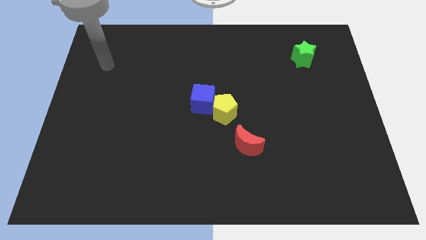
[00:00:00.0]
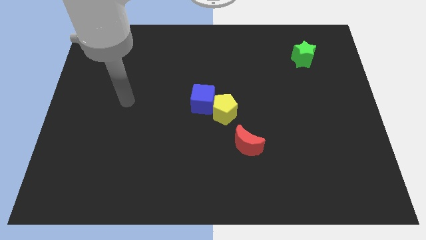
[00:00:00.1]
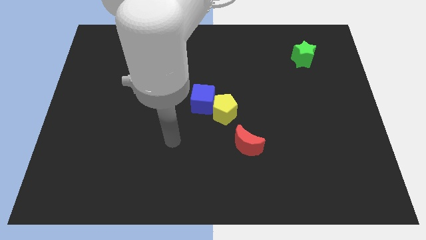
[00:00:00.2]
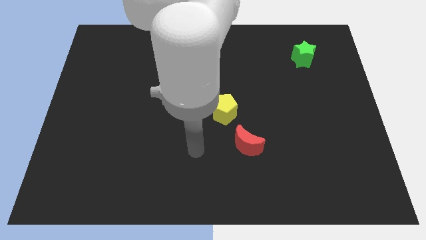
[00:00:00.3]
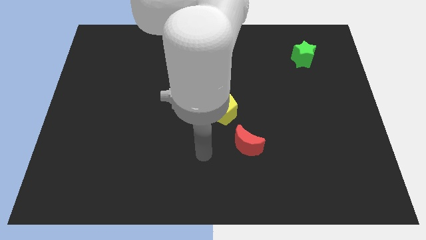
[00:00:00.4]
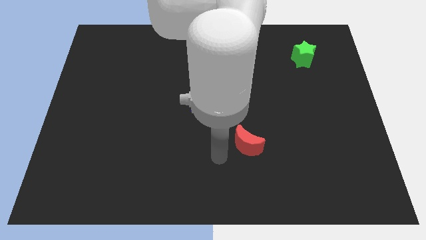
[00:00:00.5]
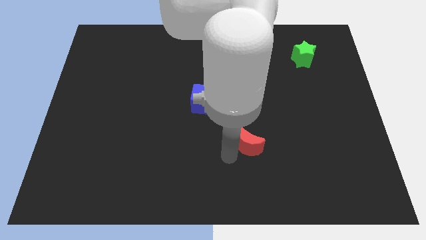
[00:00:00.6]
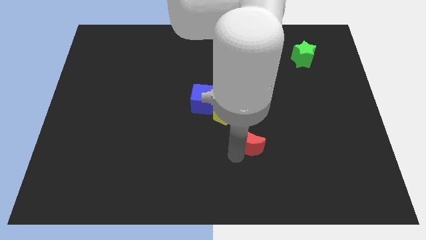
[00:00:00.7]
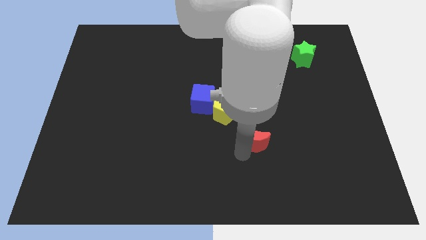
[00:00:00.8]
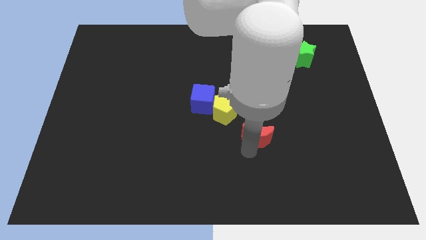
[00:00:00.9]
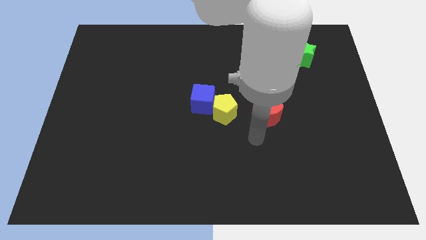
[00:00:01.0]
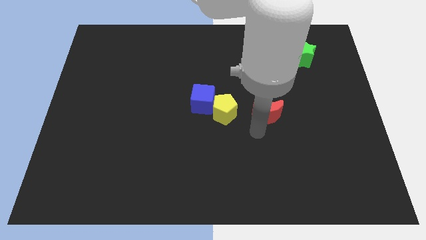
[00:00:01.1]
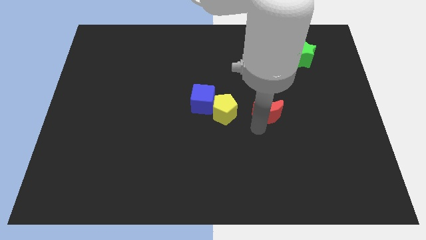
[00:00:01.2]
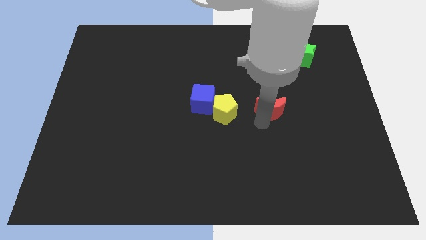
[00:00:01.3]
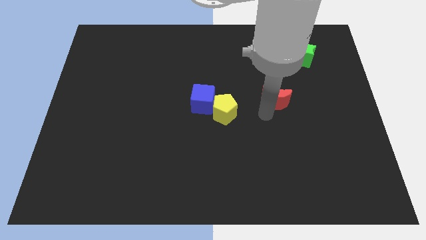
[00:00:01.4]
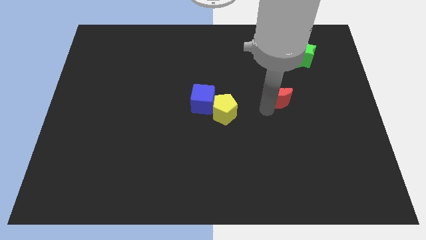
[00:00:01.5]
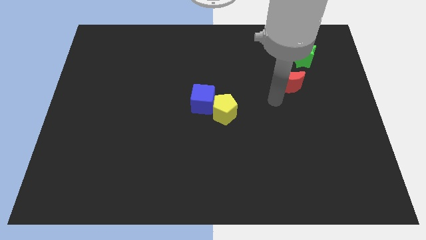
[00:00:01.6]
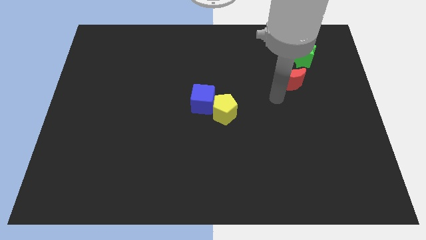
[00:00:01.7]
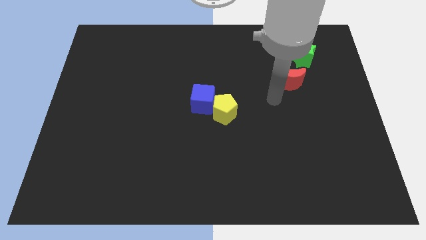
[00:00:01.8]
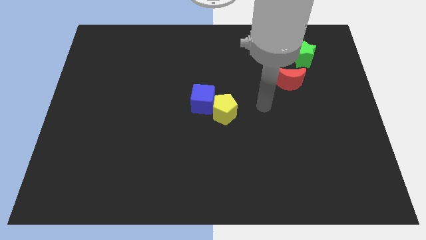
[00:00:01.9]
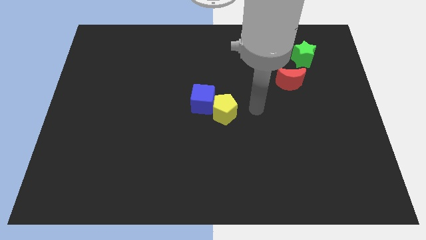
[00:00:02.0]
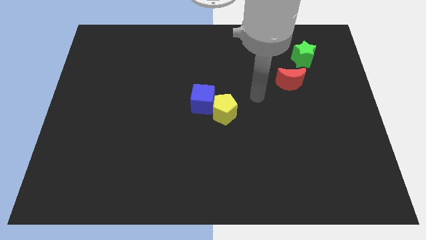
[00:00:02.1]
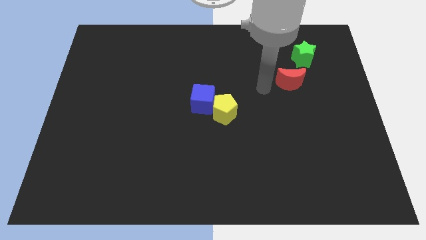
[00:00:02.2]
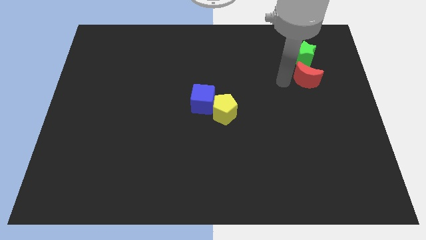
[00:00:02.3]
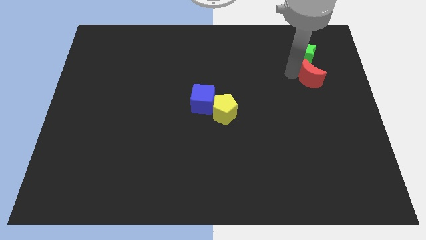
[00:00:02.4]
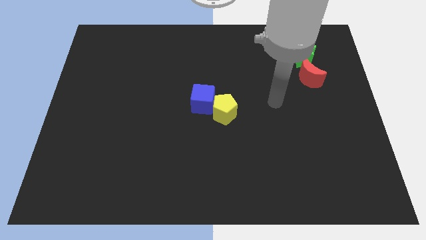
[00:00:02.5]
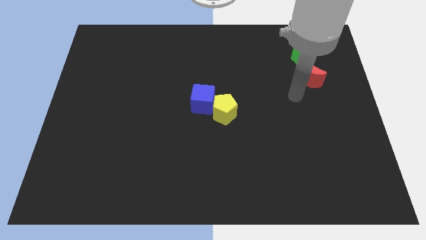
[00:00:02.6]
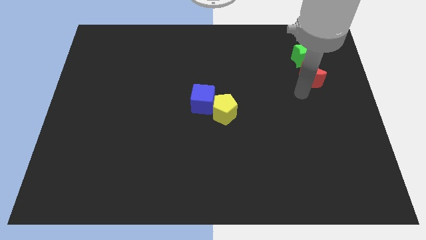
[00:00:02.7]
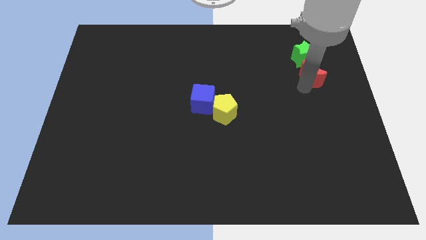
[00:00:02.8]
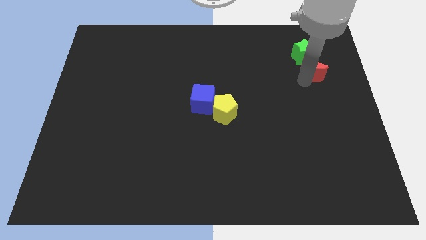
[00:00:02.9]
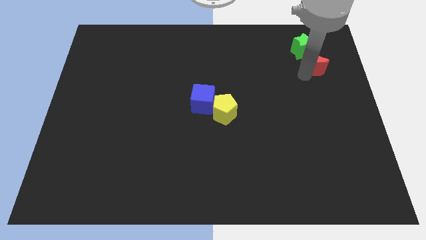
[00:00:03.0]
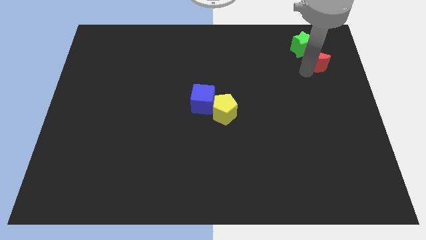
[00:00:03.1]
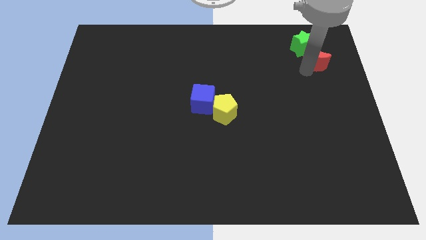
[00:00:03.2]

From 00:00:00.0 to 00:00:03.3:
push the moon towards the star

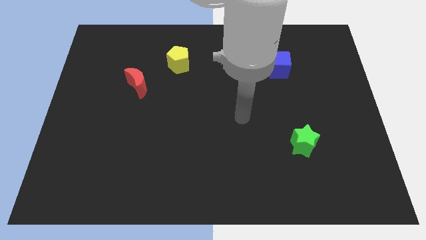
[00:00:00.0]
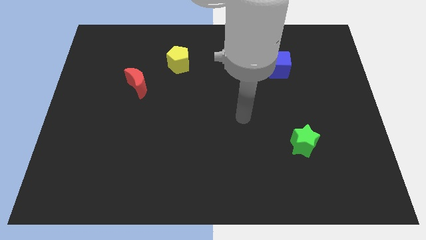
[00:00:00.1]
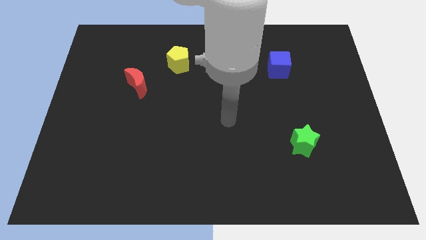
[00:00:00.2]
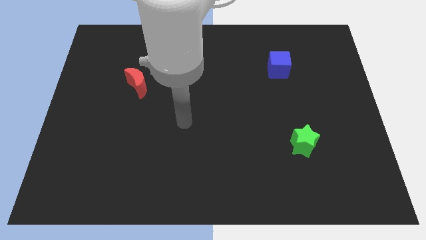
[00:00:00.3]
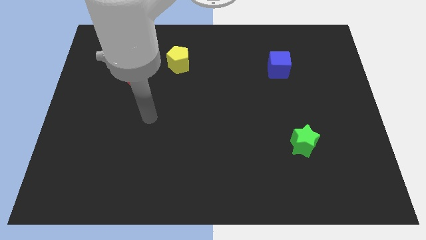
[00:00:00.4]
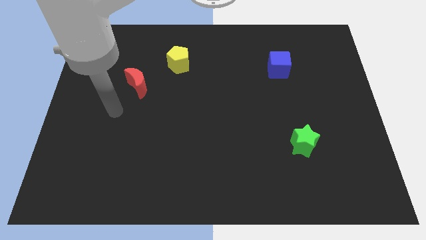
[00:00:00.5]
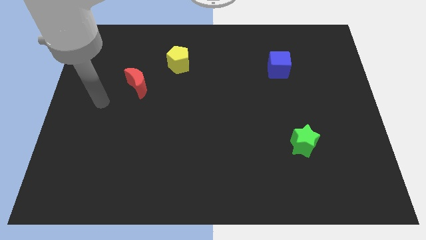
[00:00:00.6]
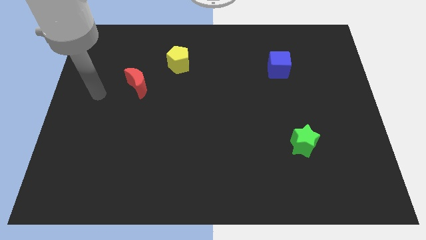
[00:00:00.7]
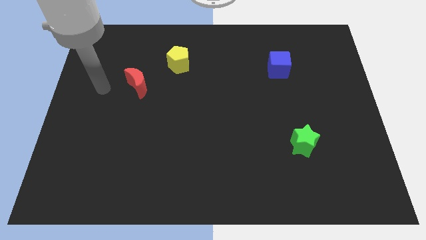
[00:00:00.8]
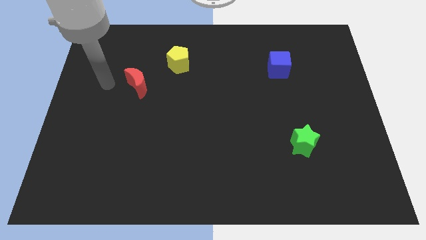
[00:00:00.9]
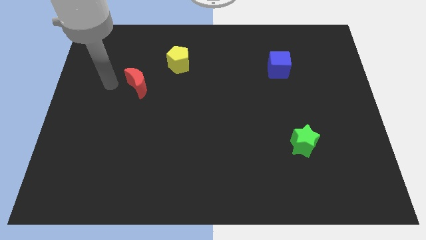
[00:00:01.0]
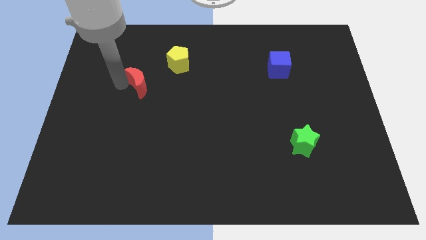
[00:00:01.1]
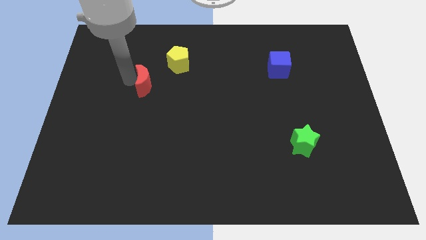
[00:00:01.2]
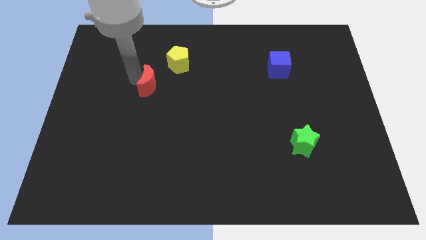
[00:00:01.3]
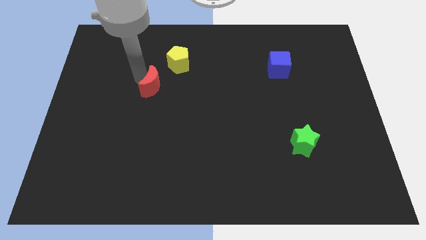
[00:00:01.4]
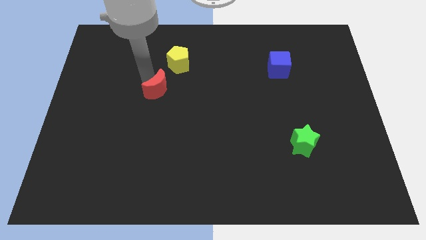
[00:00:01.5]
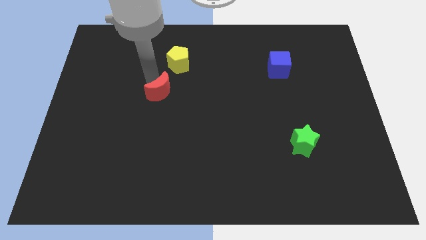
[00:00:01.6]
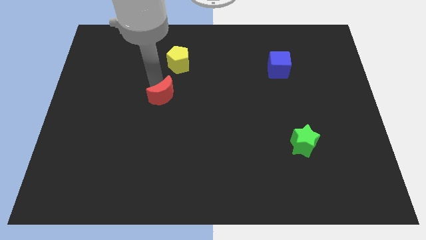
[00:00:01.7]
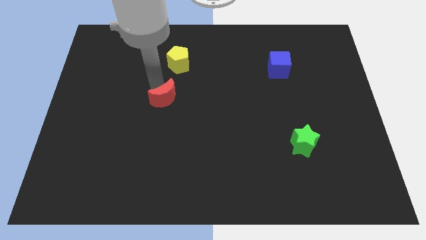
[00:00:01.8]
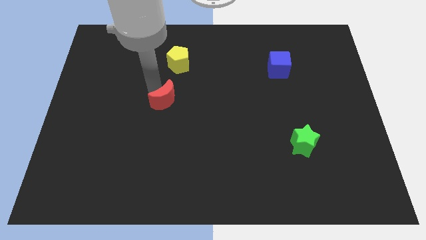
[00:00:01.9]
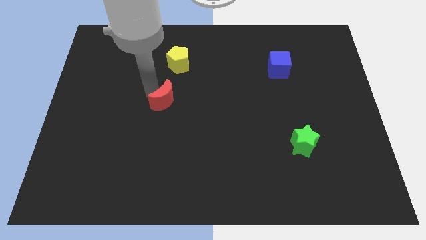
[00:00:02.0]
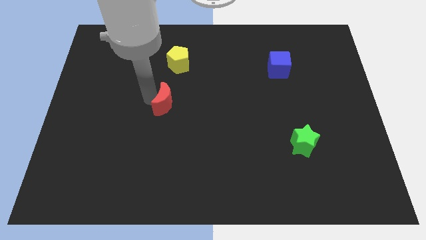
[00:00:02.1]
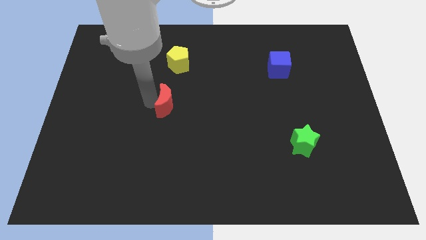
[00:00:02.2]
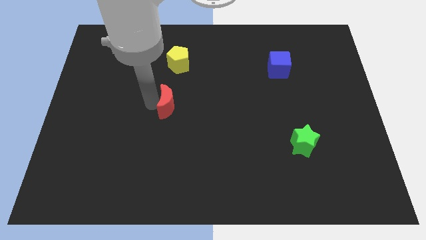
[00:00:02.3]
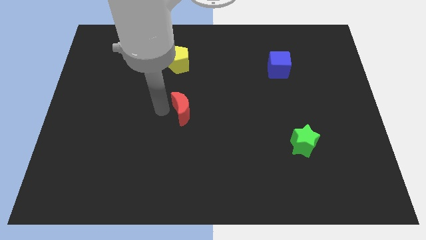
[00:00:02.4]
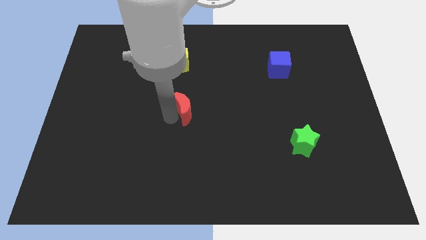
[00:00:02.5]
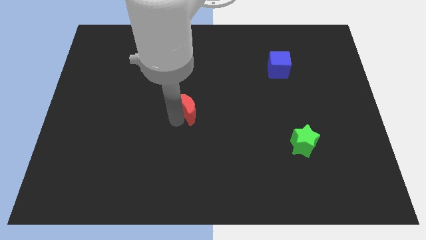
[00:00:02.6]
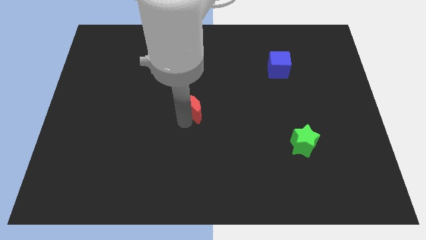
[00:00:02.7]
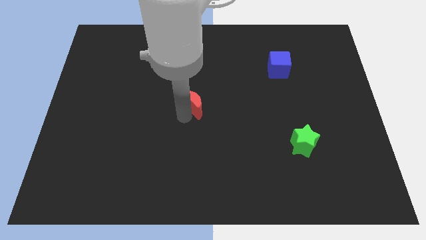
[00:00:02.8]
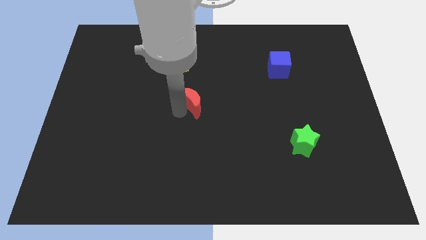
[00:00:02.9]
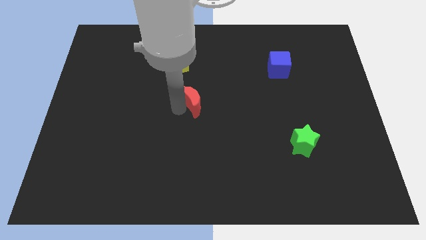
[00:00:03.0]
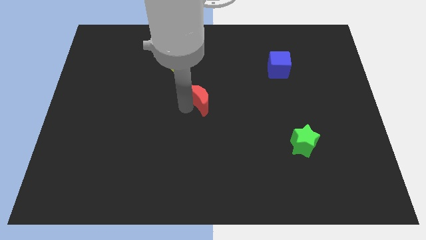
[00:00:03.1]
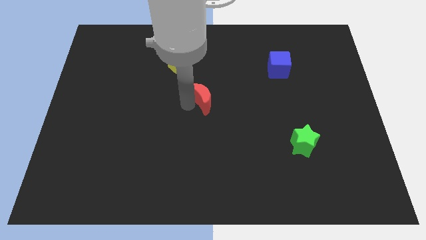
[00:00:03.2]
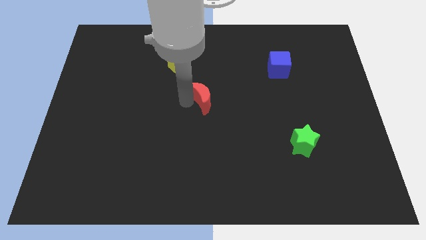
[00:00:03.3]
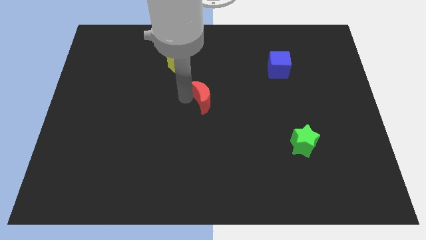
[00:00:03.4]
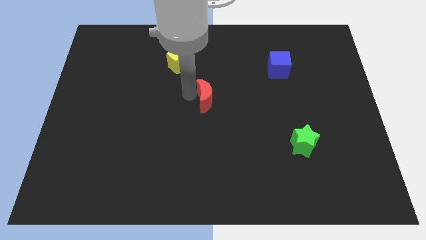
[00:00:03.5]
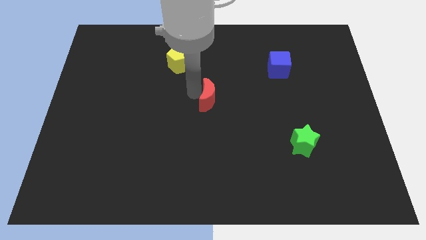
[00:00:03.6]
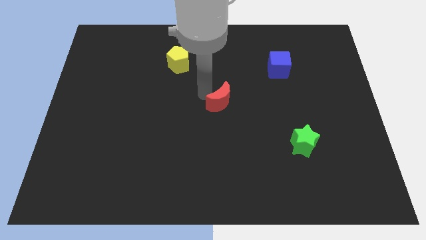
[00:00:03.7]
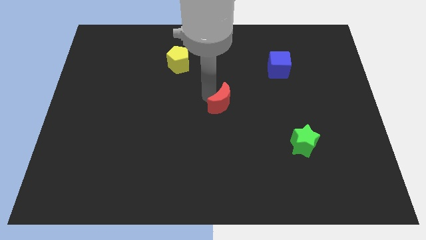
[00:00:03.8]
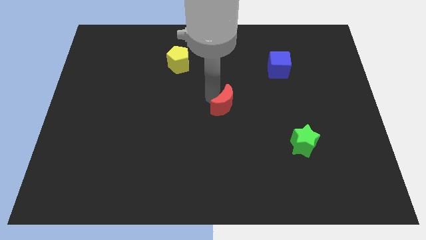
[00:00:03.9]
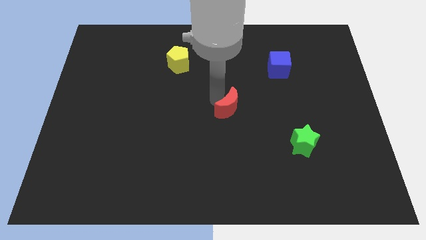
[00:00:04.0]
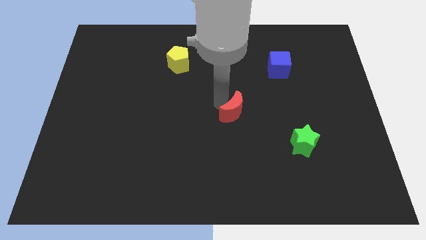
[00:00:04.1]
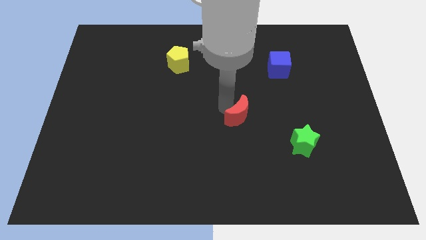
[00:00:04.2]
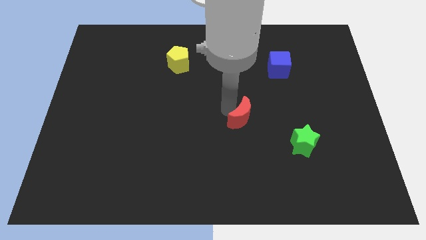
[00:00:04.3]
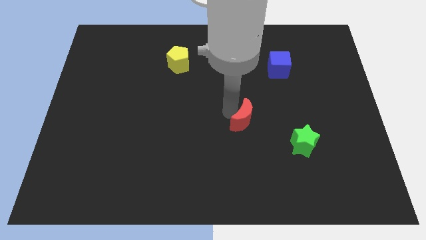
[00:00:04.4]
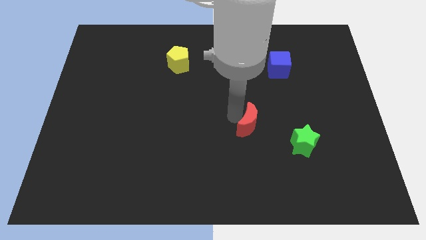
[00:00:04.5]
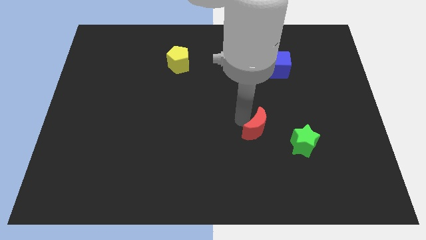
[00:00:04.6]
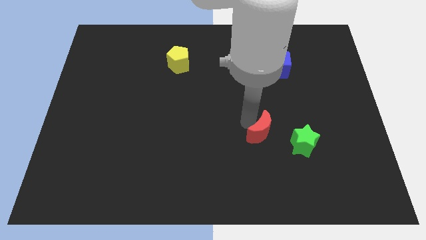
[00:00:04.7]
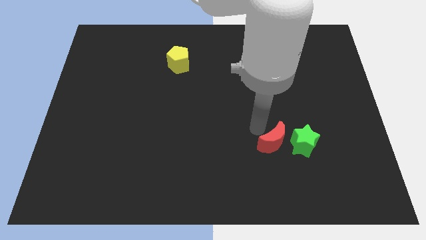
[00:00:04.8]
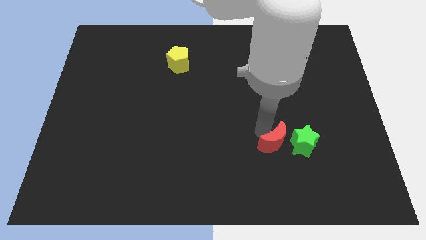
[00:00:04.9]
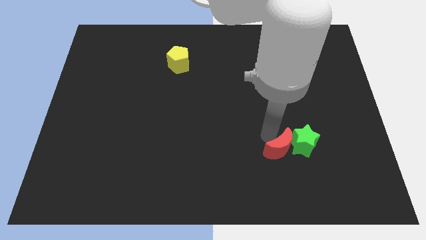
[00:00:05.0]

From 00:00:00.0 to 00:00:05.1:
push the moon to the star

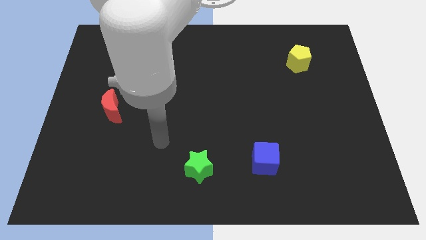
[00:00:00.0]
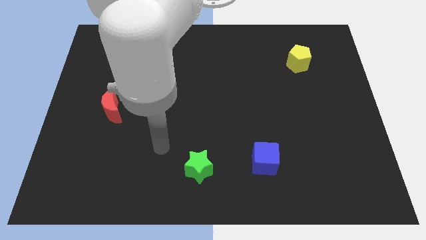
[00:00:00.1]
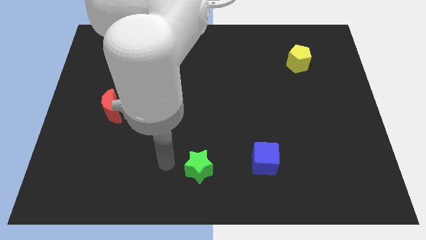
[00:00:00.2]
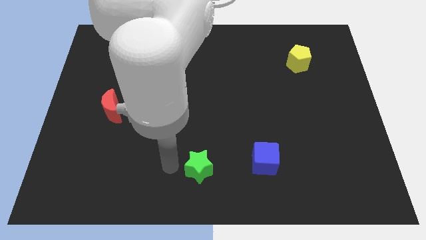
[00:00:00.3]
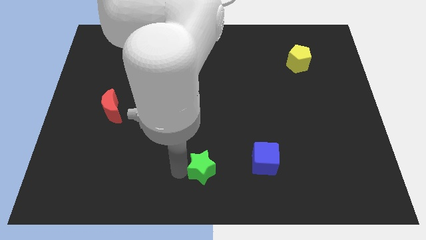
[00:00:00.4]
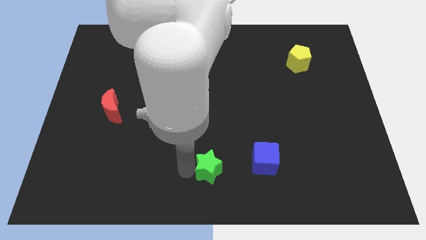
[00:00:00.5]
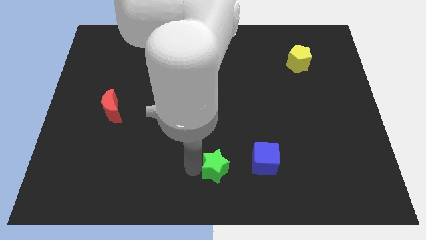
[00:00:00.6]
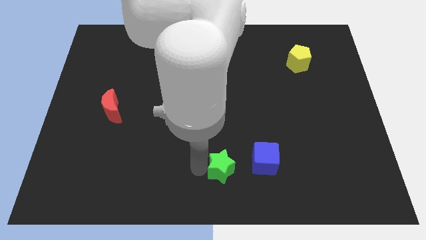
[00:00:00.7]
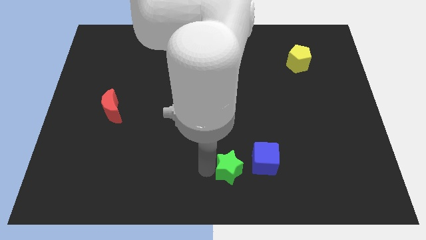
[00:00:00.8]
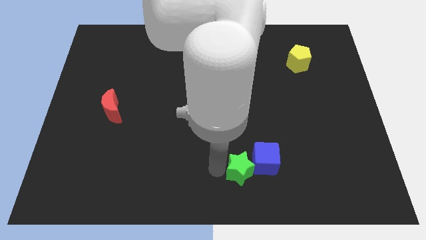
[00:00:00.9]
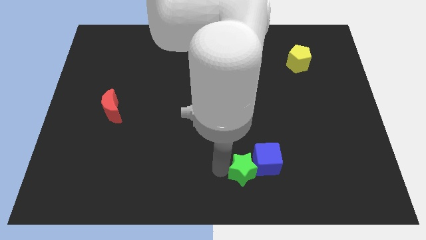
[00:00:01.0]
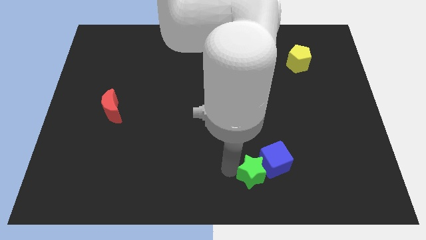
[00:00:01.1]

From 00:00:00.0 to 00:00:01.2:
push the star close to the cube
